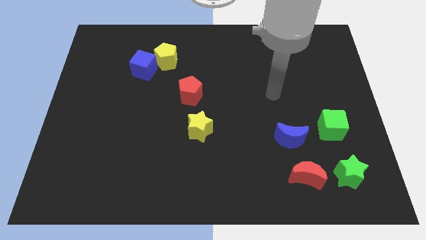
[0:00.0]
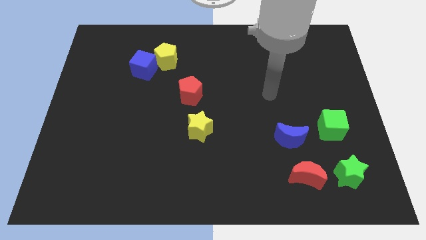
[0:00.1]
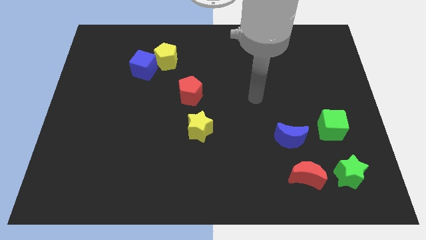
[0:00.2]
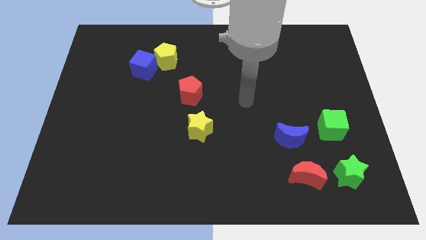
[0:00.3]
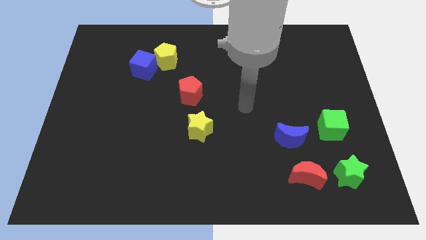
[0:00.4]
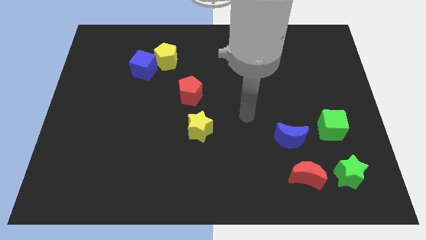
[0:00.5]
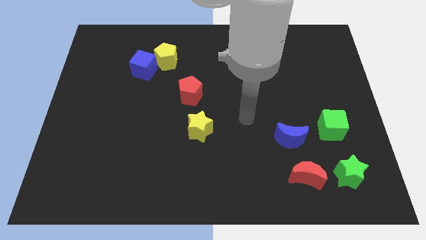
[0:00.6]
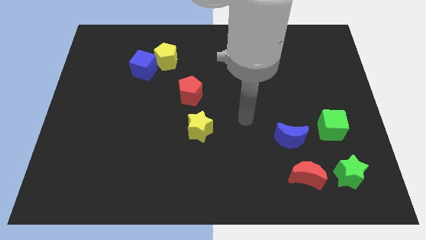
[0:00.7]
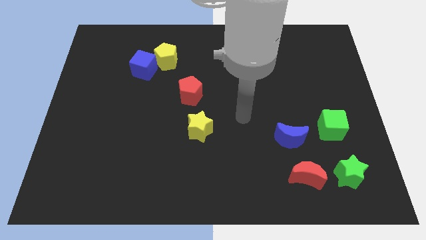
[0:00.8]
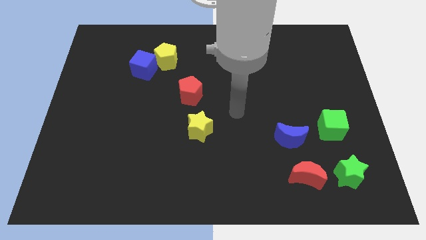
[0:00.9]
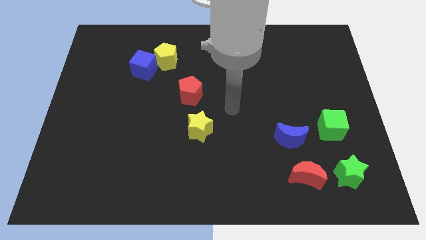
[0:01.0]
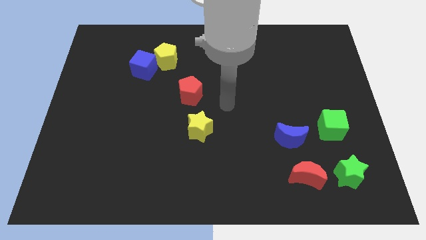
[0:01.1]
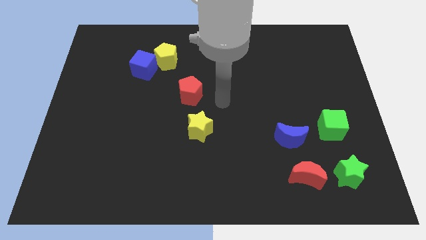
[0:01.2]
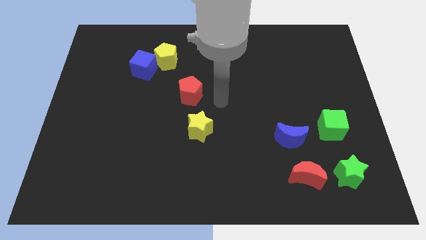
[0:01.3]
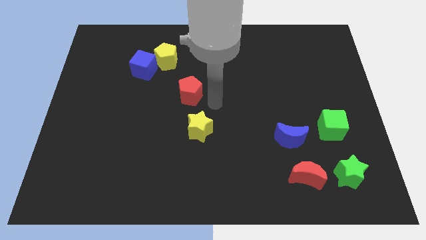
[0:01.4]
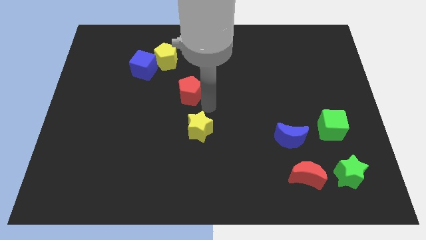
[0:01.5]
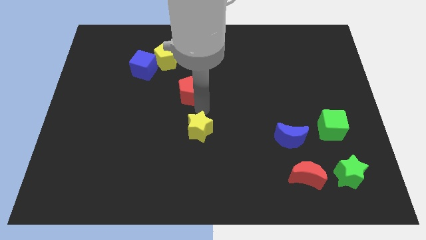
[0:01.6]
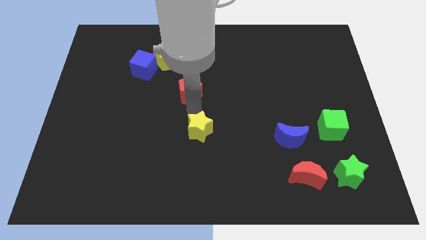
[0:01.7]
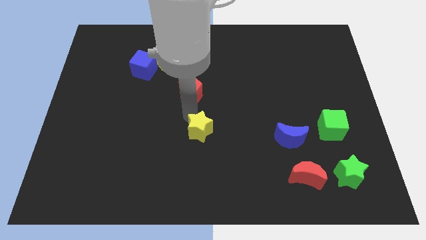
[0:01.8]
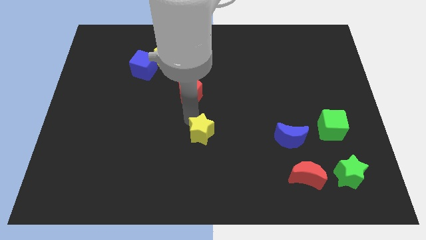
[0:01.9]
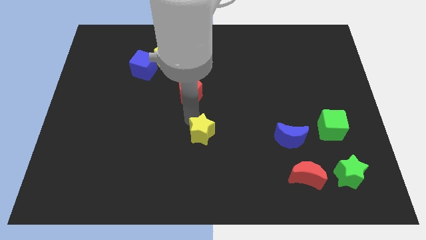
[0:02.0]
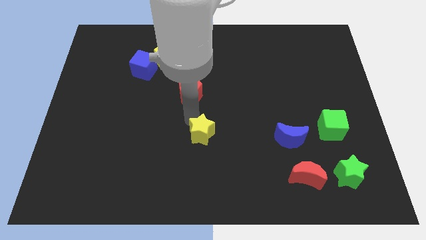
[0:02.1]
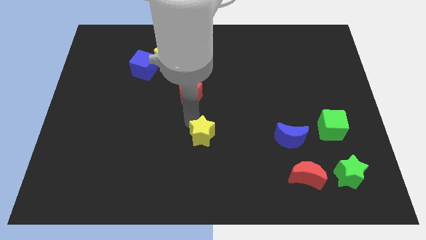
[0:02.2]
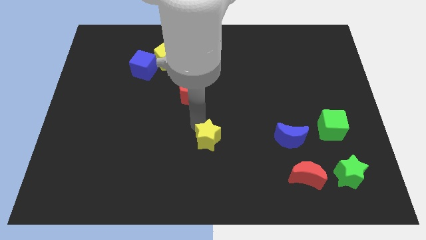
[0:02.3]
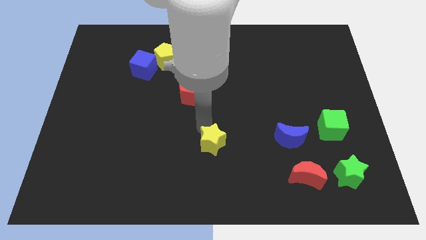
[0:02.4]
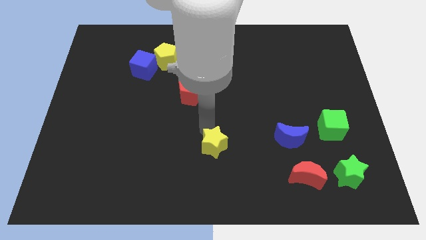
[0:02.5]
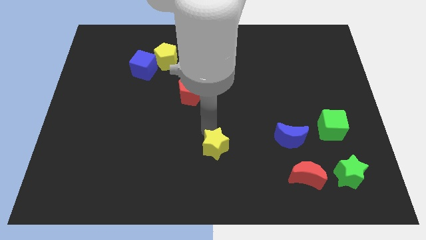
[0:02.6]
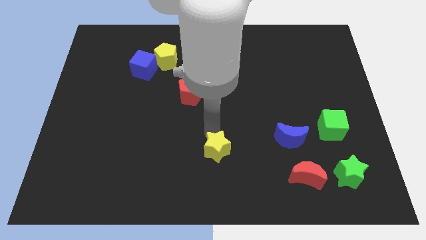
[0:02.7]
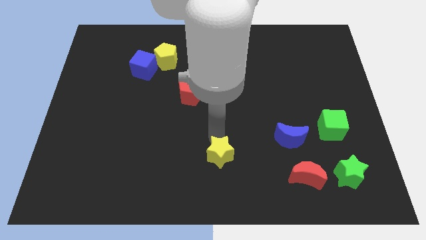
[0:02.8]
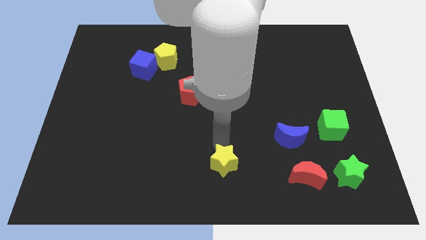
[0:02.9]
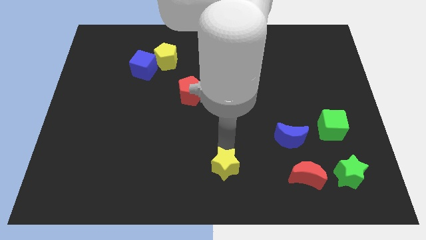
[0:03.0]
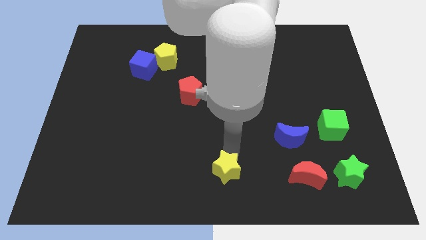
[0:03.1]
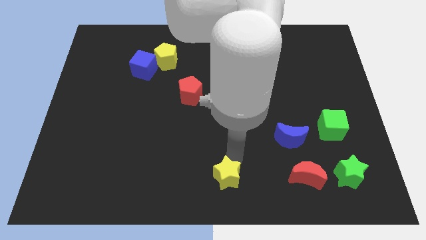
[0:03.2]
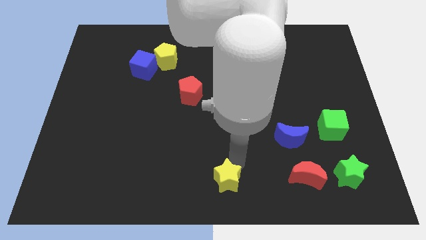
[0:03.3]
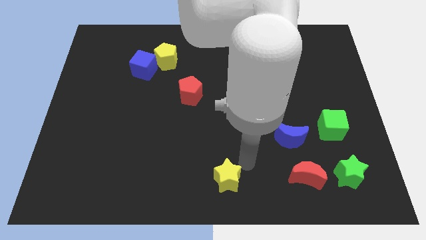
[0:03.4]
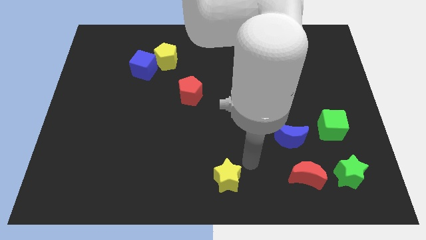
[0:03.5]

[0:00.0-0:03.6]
move the yellow star to the bottom center of the board

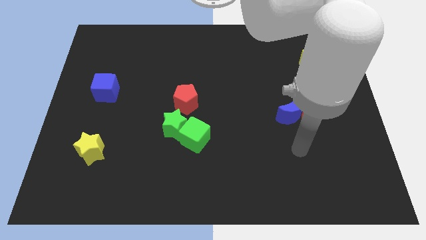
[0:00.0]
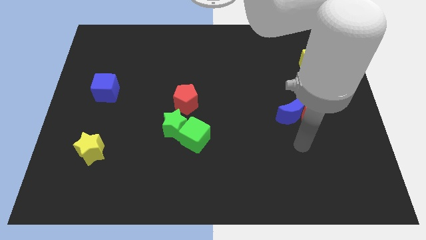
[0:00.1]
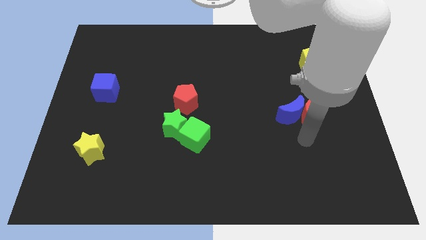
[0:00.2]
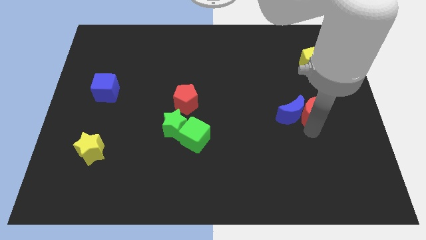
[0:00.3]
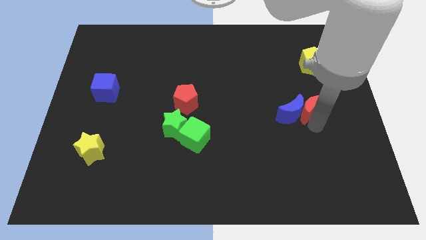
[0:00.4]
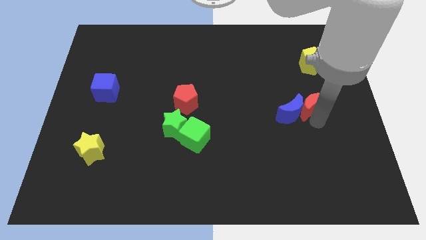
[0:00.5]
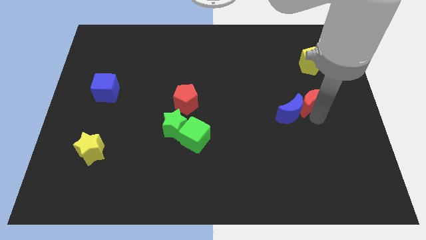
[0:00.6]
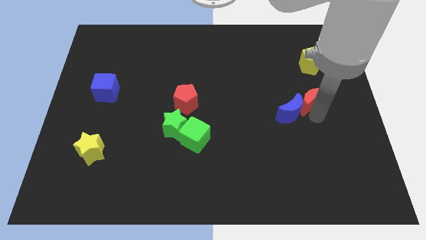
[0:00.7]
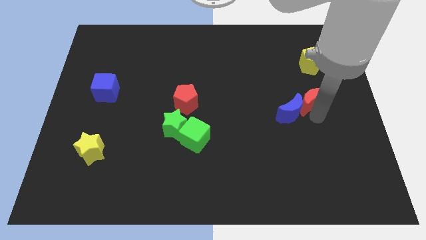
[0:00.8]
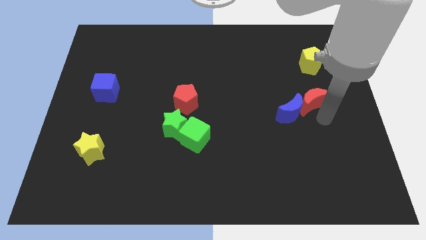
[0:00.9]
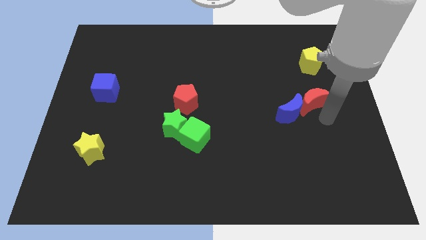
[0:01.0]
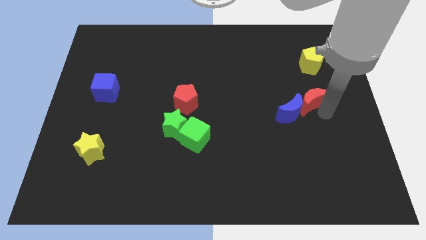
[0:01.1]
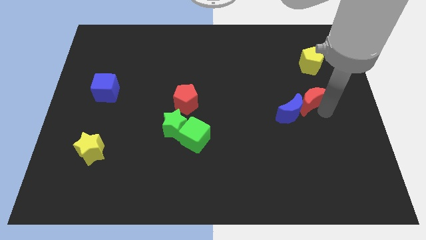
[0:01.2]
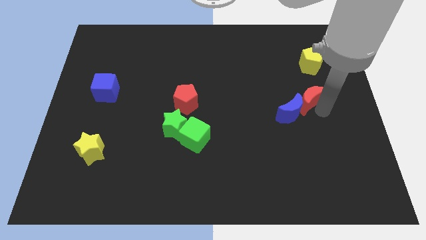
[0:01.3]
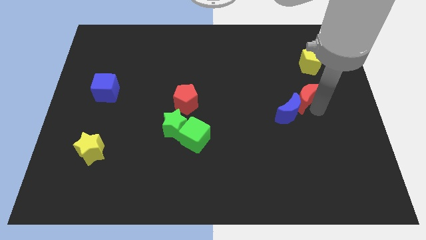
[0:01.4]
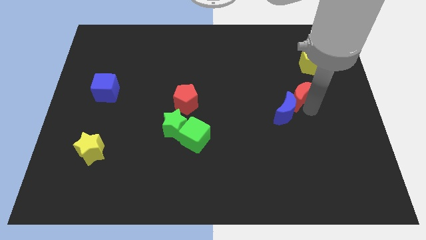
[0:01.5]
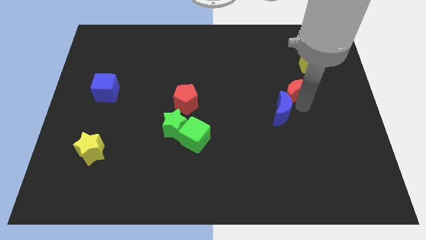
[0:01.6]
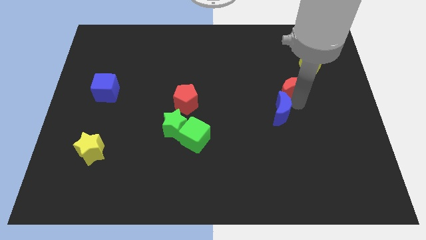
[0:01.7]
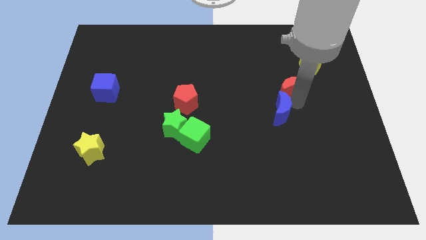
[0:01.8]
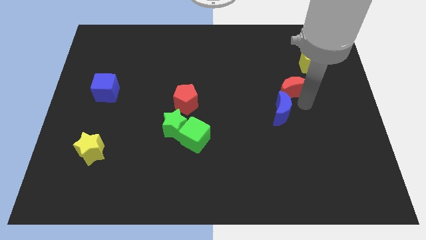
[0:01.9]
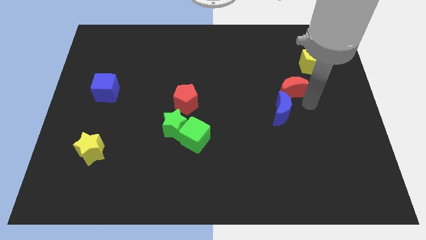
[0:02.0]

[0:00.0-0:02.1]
push the red moon upwards

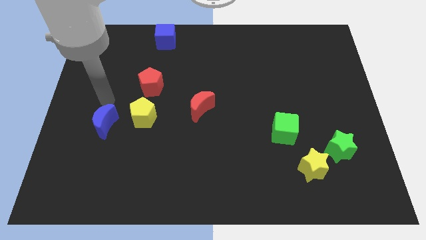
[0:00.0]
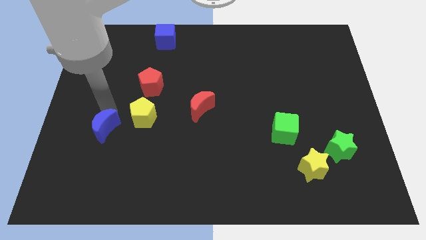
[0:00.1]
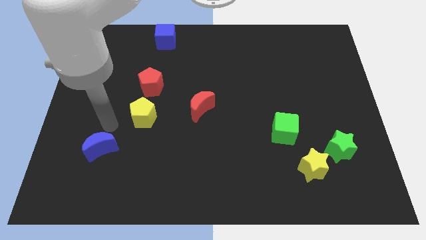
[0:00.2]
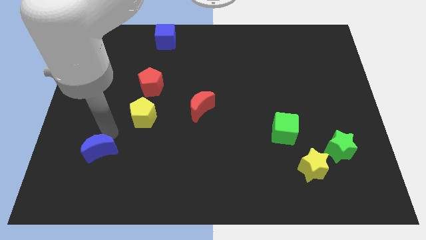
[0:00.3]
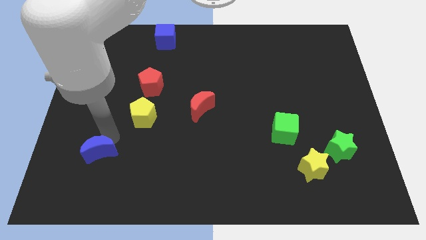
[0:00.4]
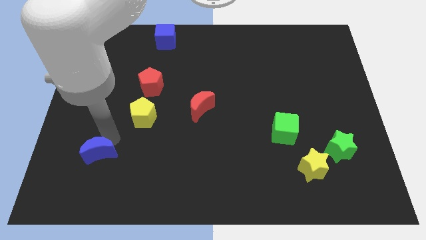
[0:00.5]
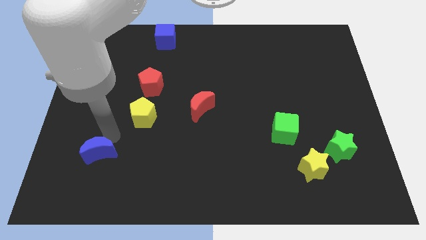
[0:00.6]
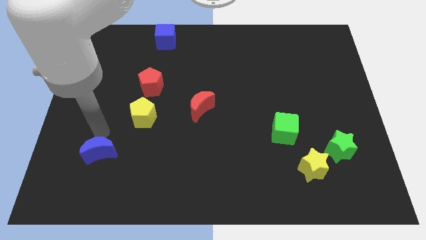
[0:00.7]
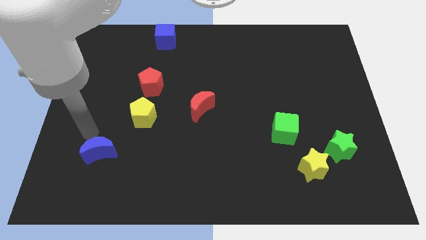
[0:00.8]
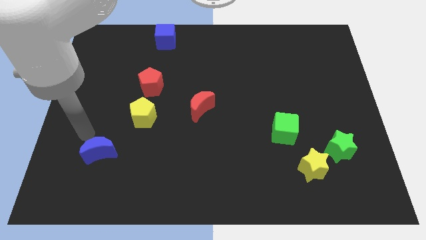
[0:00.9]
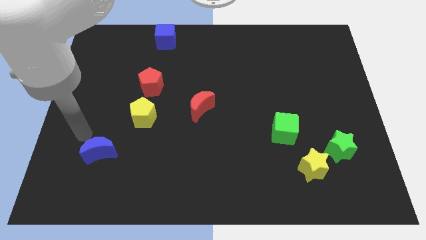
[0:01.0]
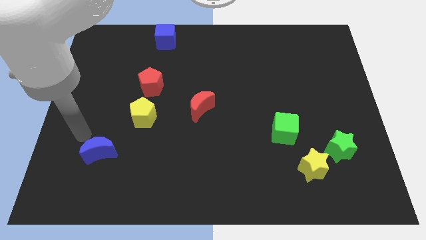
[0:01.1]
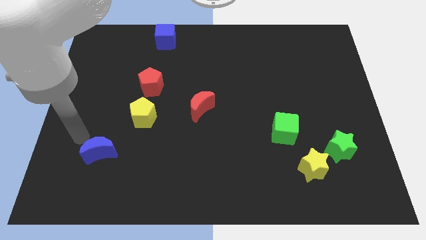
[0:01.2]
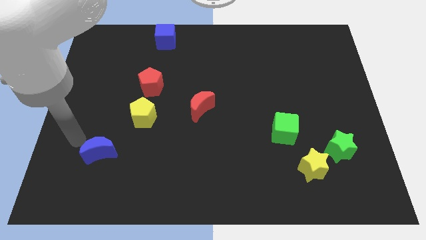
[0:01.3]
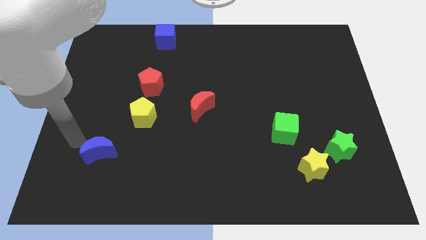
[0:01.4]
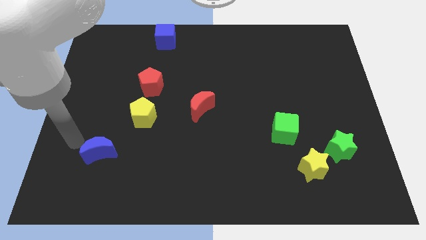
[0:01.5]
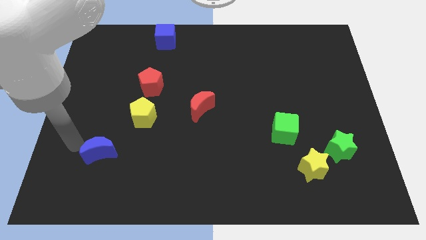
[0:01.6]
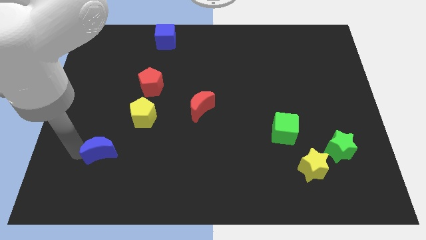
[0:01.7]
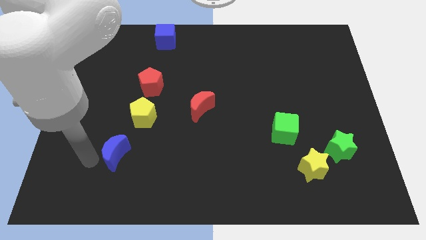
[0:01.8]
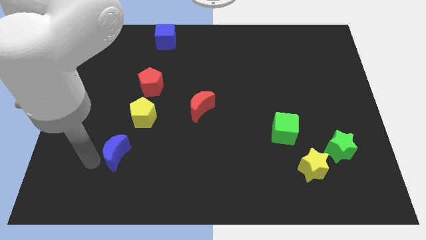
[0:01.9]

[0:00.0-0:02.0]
move the blue moon to the bottom left of the yellow pentagon

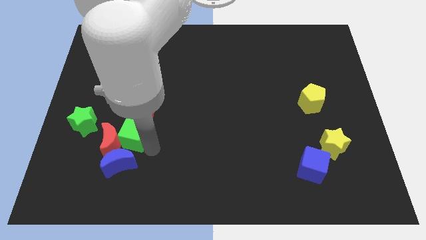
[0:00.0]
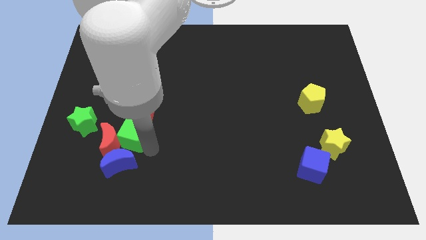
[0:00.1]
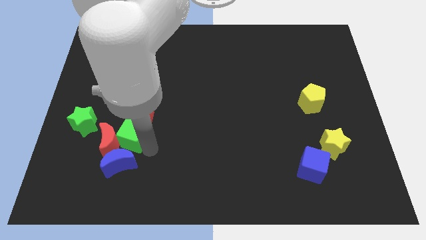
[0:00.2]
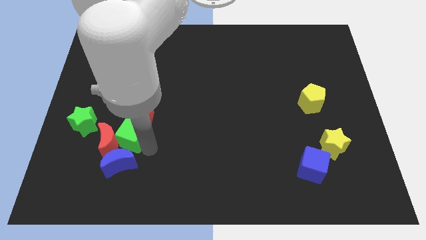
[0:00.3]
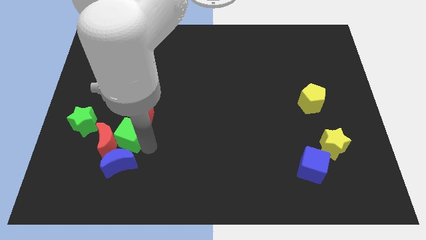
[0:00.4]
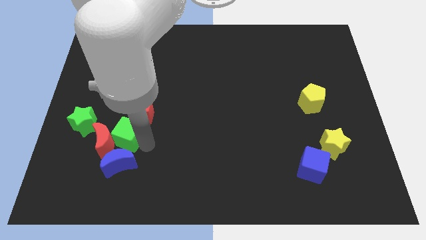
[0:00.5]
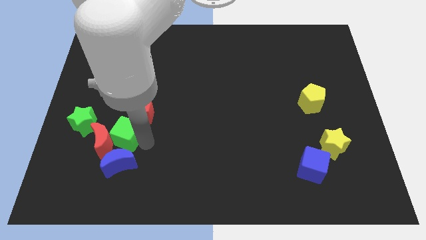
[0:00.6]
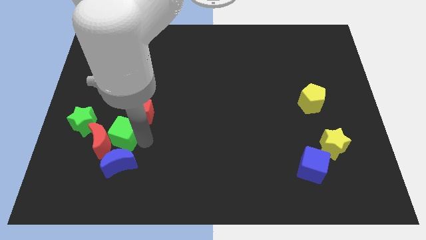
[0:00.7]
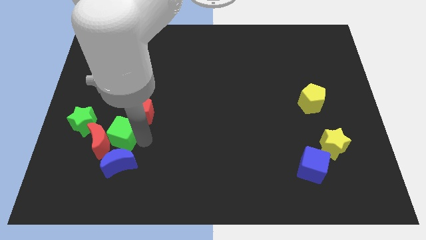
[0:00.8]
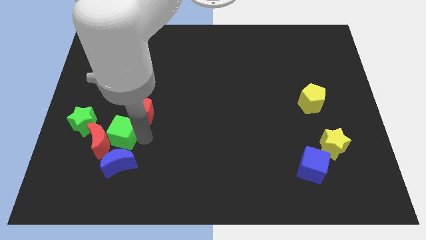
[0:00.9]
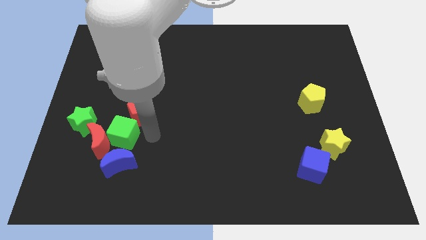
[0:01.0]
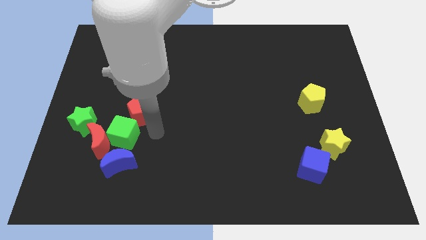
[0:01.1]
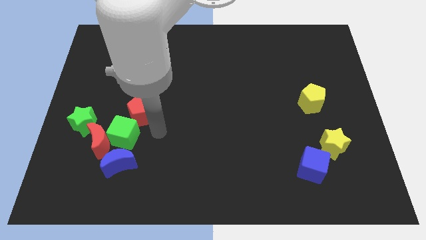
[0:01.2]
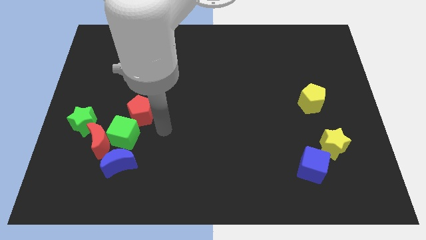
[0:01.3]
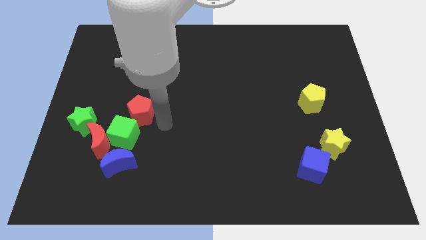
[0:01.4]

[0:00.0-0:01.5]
move the arm away from the green cube
